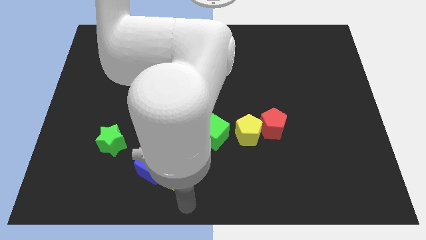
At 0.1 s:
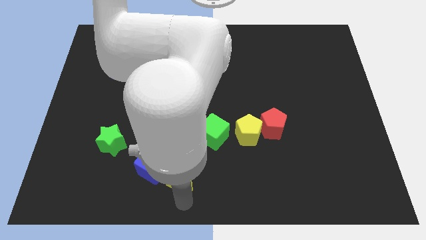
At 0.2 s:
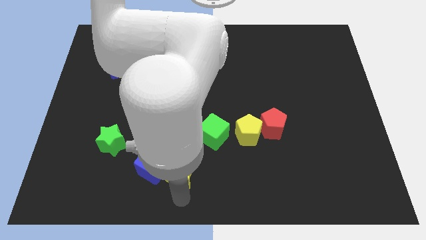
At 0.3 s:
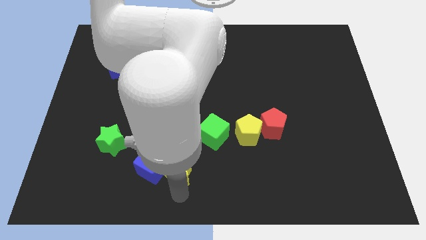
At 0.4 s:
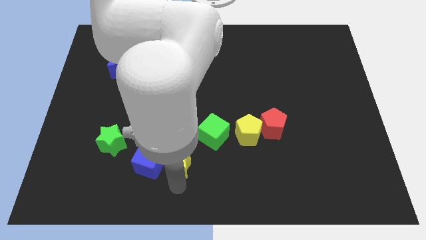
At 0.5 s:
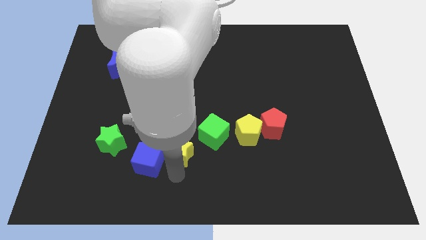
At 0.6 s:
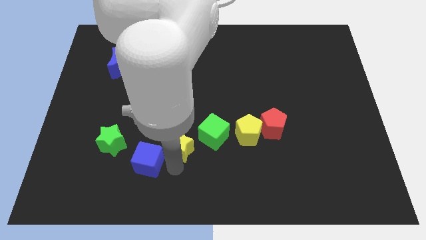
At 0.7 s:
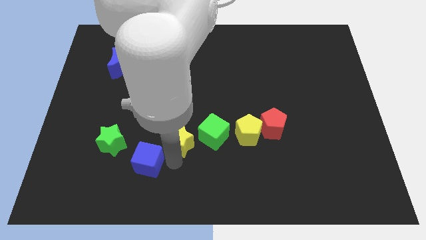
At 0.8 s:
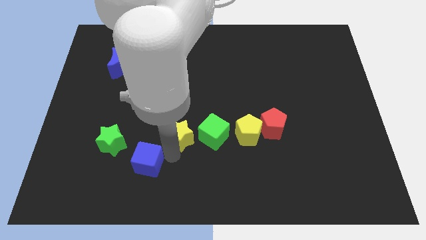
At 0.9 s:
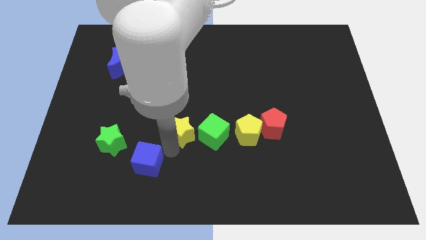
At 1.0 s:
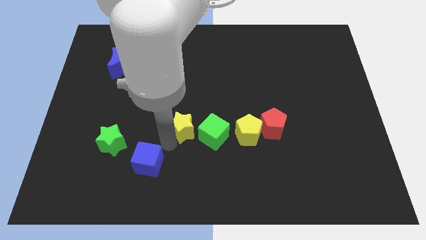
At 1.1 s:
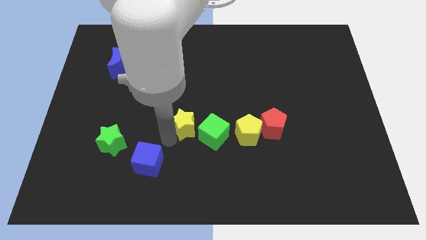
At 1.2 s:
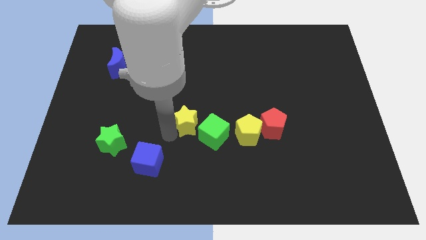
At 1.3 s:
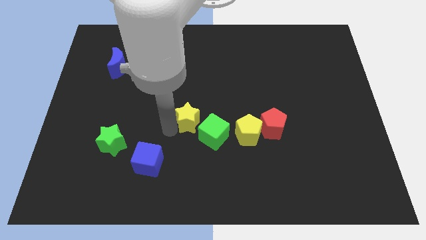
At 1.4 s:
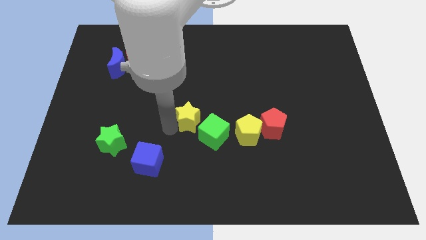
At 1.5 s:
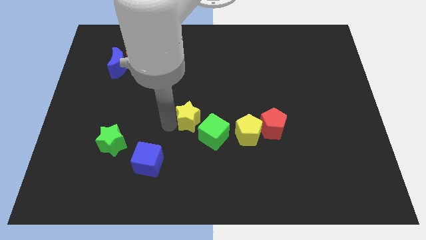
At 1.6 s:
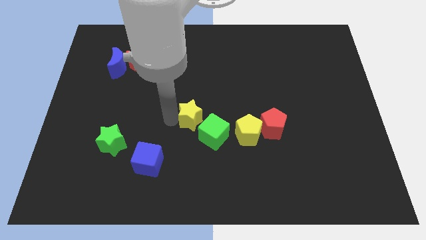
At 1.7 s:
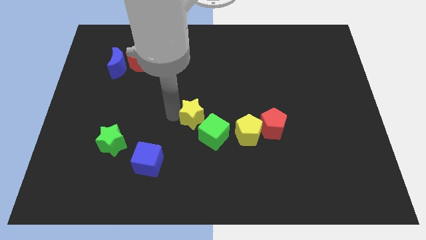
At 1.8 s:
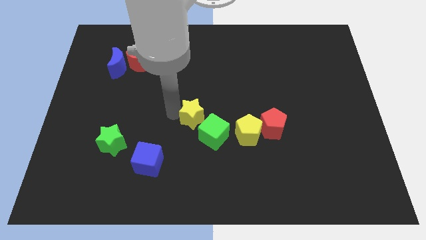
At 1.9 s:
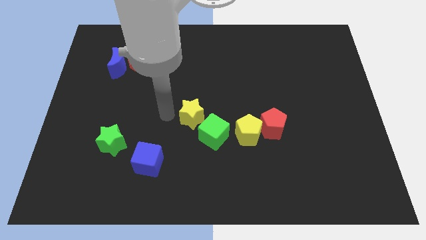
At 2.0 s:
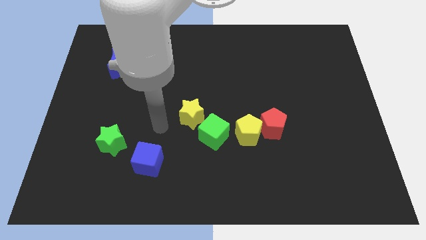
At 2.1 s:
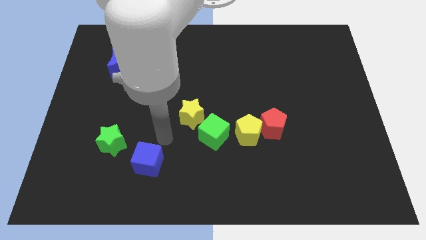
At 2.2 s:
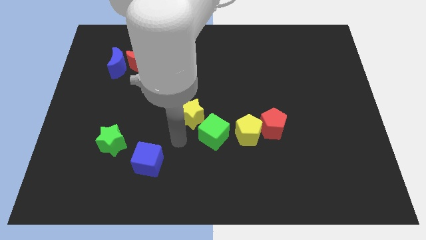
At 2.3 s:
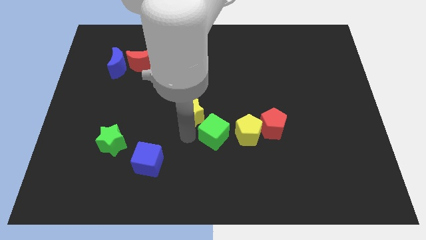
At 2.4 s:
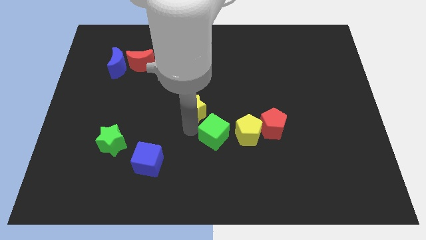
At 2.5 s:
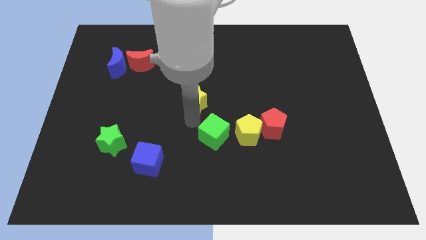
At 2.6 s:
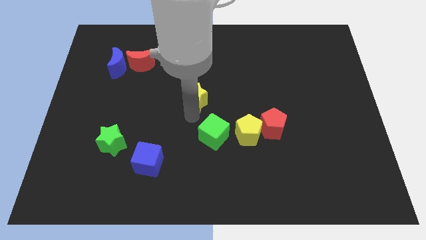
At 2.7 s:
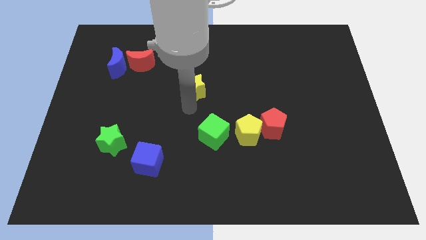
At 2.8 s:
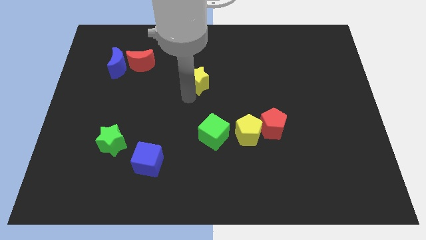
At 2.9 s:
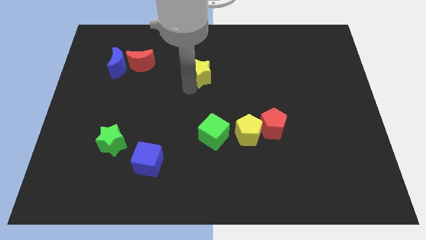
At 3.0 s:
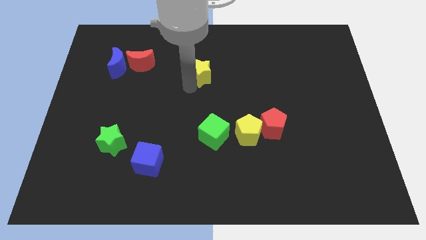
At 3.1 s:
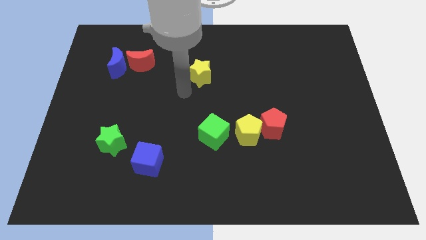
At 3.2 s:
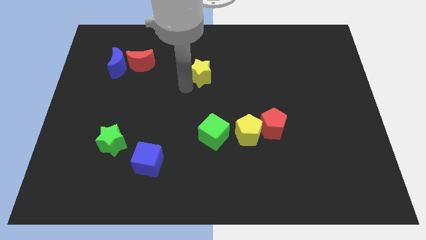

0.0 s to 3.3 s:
slide the yellow star towards the top of the board

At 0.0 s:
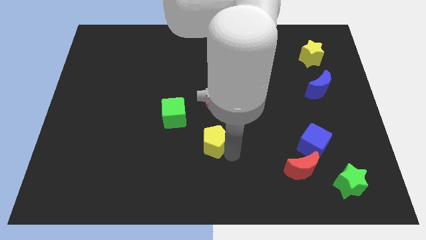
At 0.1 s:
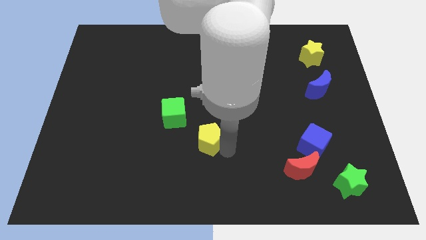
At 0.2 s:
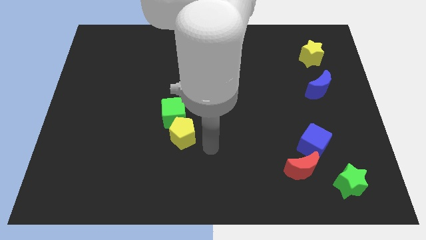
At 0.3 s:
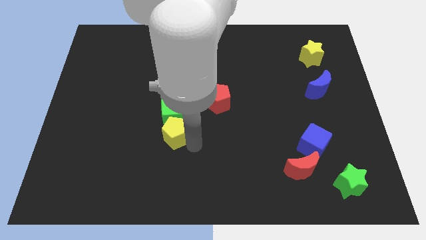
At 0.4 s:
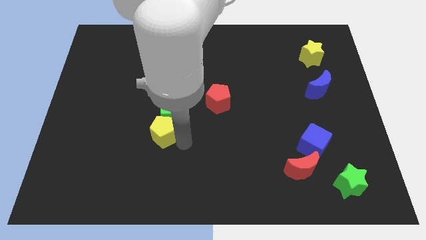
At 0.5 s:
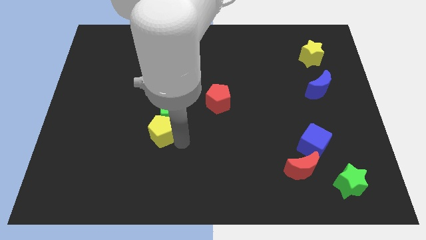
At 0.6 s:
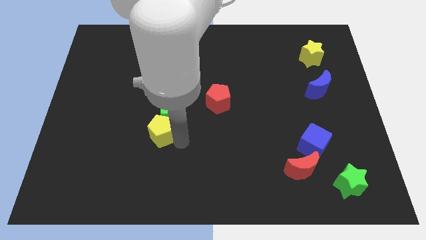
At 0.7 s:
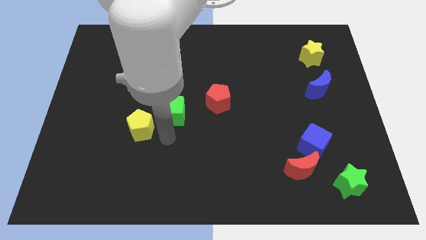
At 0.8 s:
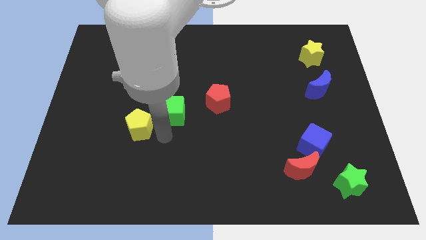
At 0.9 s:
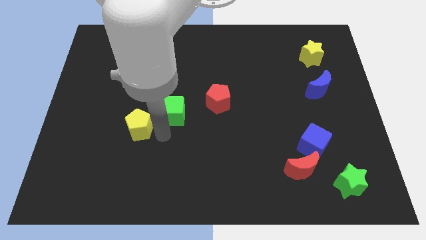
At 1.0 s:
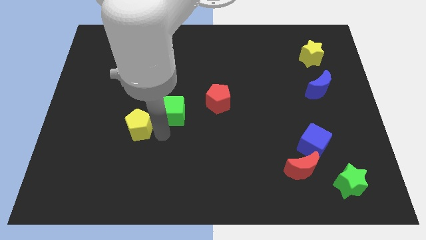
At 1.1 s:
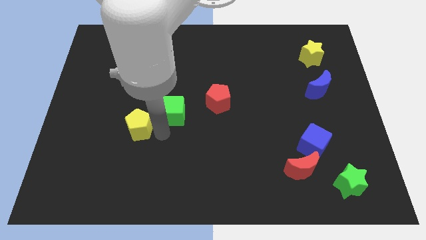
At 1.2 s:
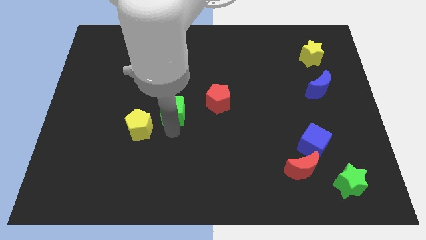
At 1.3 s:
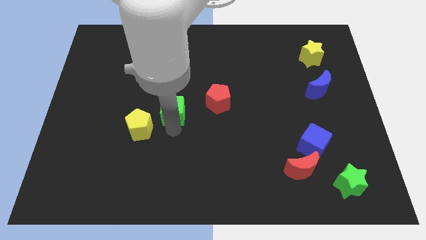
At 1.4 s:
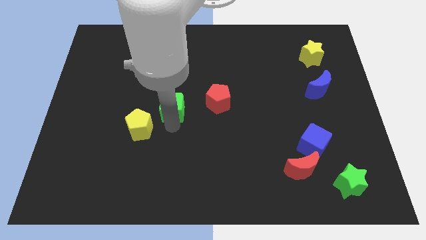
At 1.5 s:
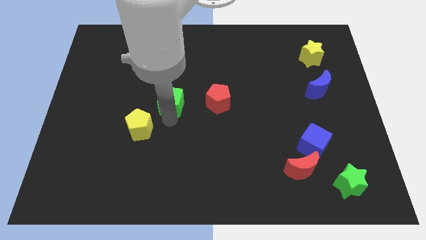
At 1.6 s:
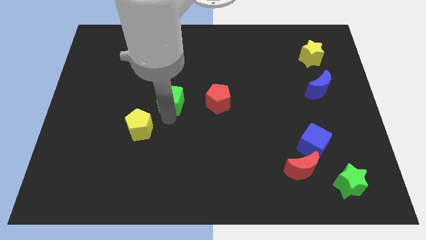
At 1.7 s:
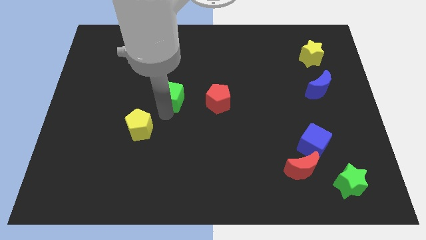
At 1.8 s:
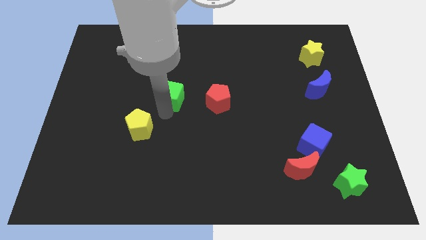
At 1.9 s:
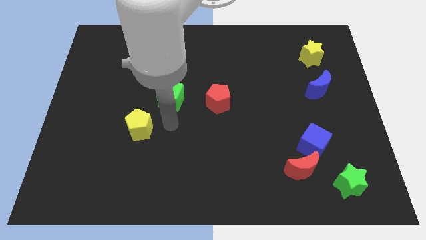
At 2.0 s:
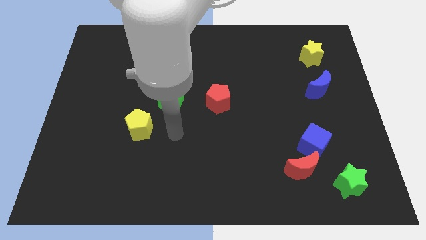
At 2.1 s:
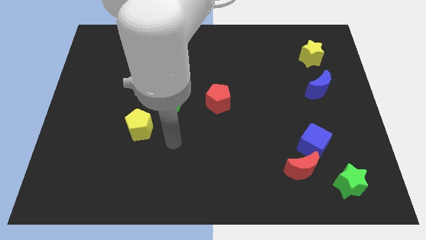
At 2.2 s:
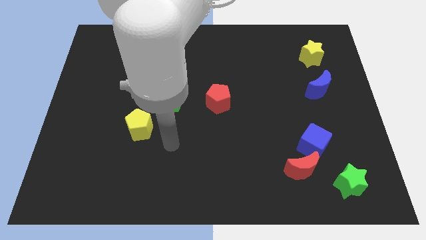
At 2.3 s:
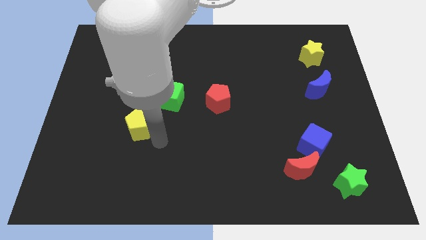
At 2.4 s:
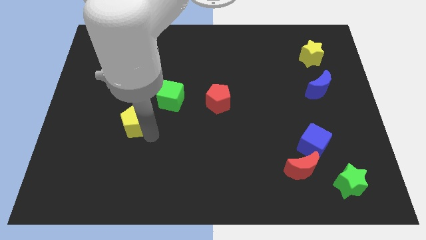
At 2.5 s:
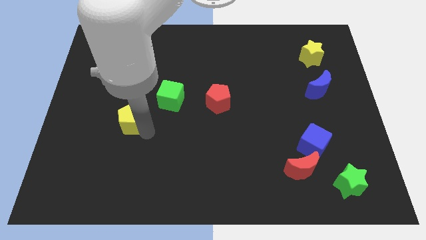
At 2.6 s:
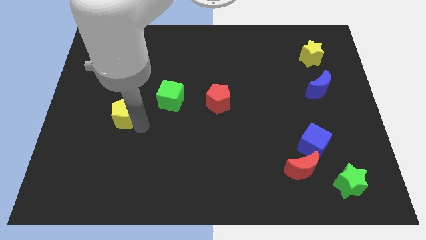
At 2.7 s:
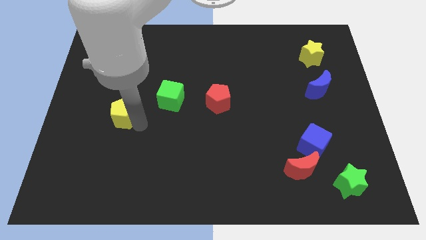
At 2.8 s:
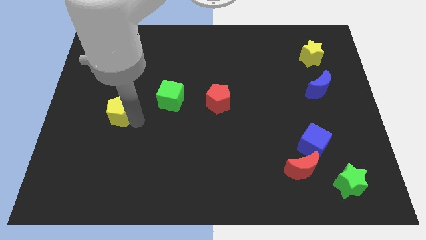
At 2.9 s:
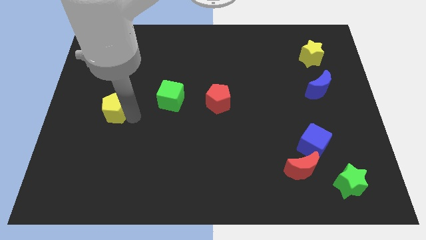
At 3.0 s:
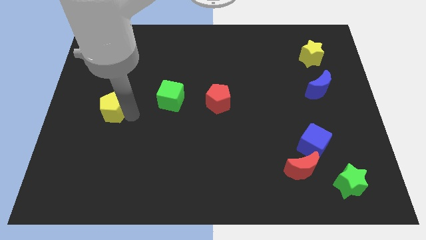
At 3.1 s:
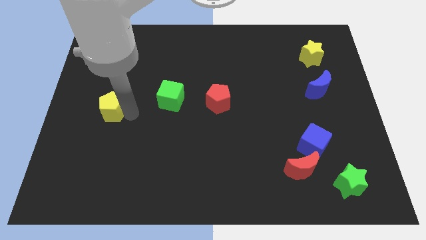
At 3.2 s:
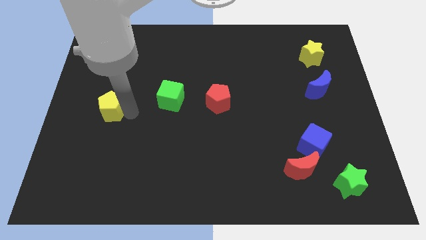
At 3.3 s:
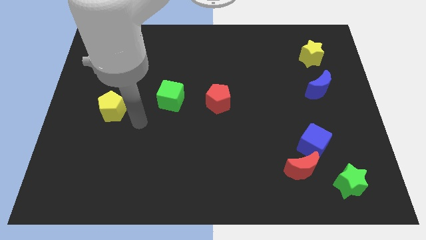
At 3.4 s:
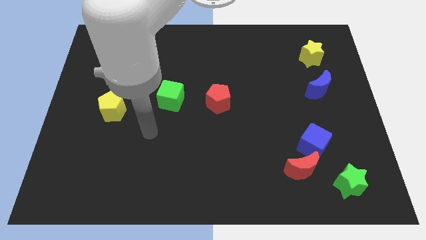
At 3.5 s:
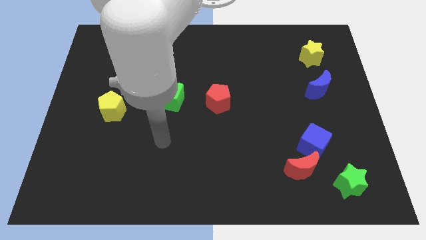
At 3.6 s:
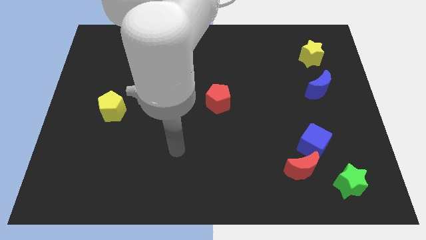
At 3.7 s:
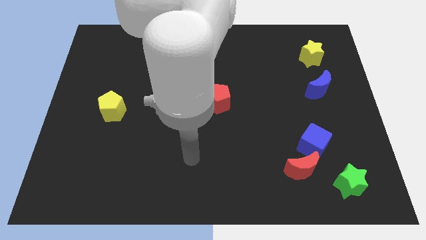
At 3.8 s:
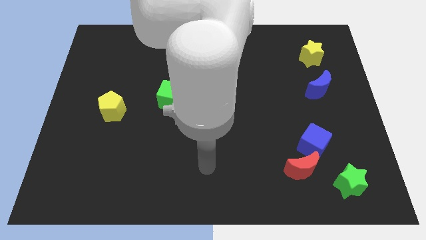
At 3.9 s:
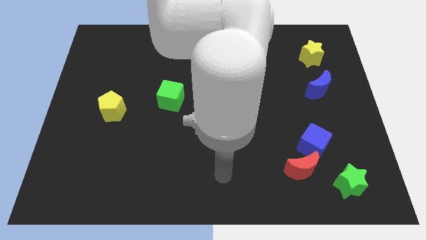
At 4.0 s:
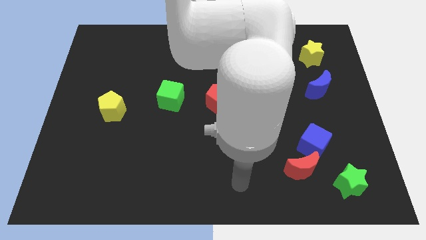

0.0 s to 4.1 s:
arrange yellow pentagon and green cube opposite to each other

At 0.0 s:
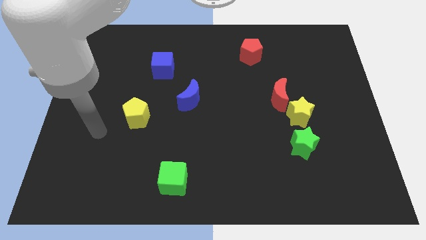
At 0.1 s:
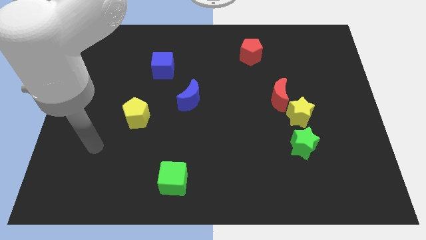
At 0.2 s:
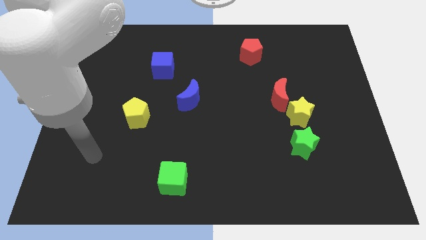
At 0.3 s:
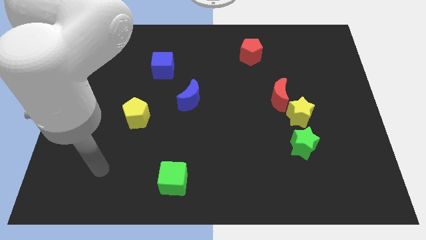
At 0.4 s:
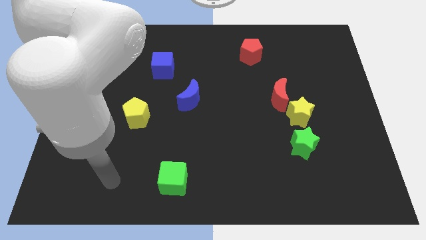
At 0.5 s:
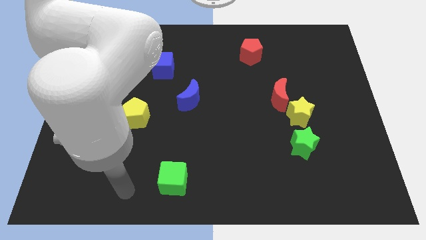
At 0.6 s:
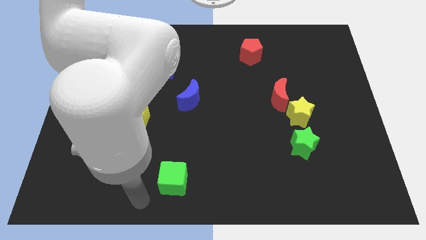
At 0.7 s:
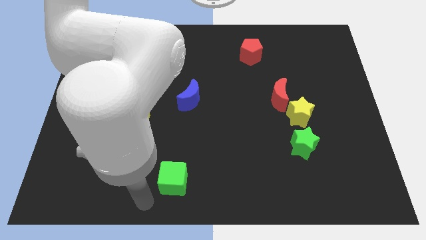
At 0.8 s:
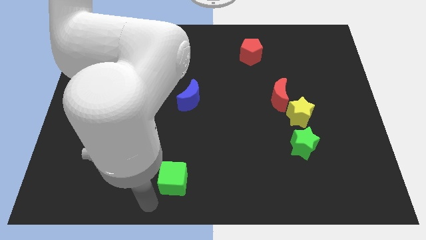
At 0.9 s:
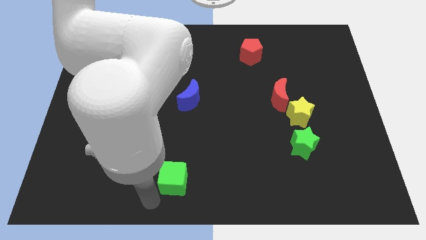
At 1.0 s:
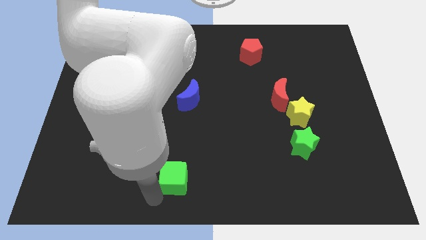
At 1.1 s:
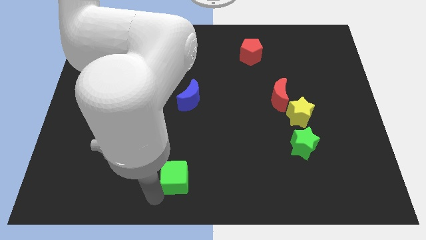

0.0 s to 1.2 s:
move your arm left bottom of the green cube

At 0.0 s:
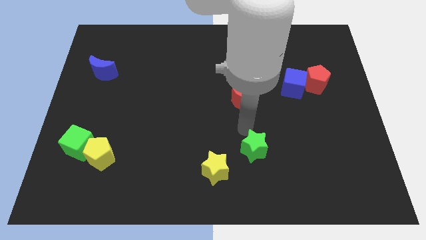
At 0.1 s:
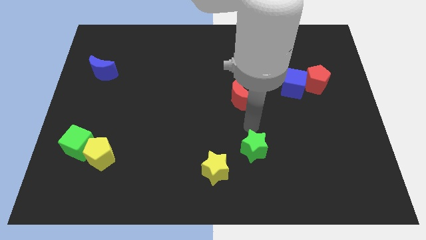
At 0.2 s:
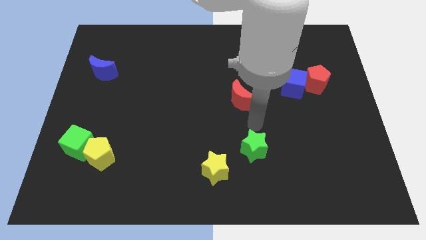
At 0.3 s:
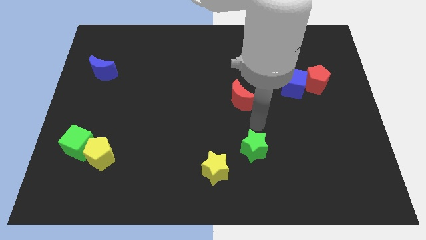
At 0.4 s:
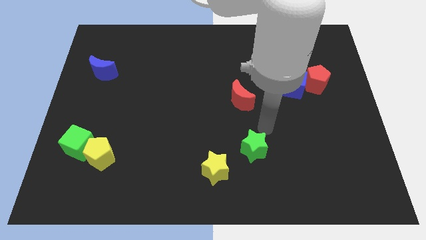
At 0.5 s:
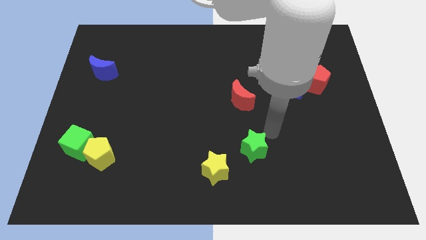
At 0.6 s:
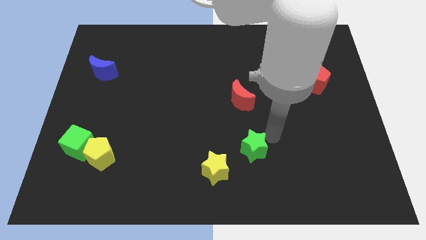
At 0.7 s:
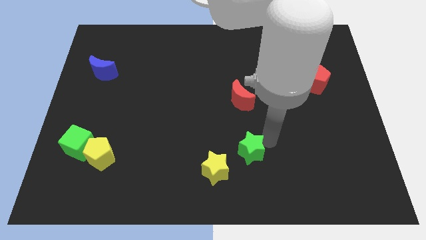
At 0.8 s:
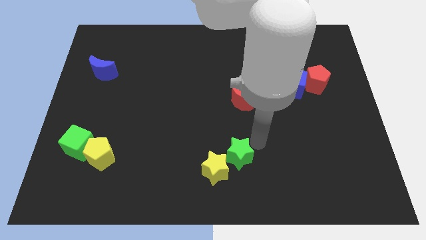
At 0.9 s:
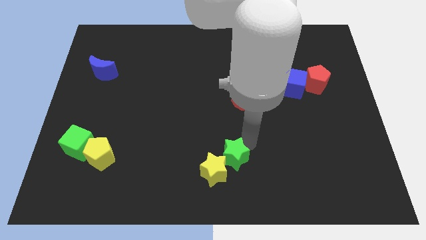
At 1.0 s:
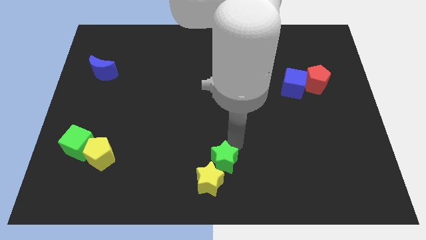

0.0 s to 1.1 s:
push the green star into the yellow star
